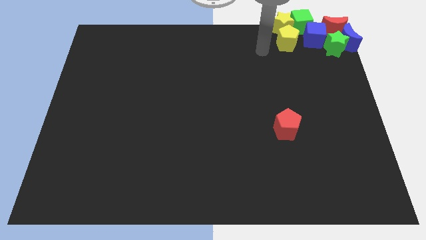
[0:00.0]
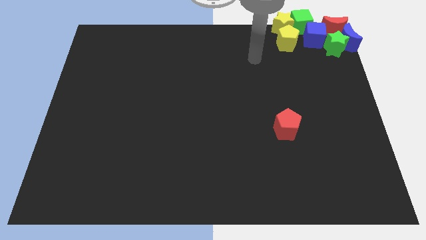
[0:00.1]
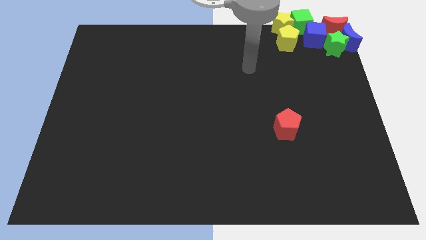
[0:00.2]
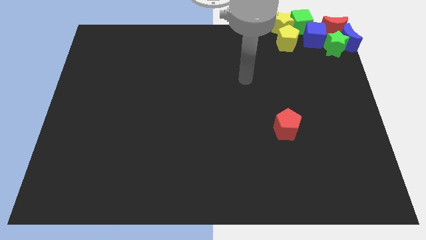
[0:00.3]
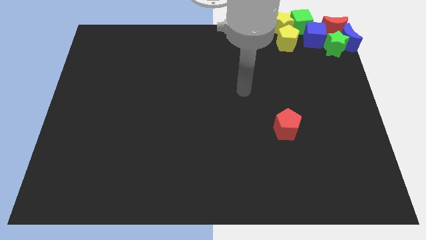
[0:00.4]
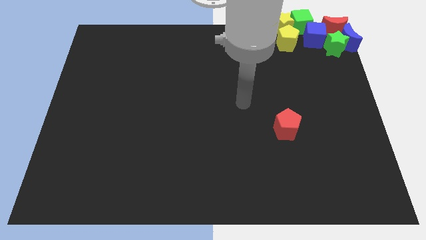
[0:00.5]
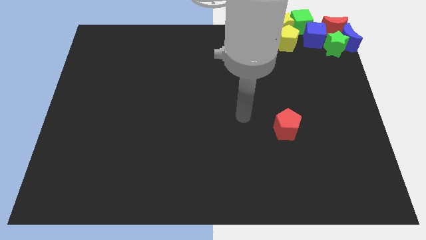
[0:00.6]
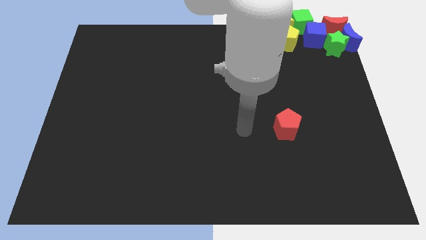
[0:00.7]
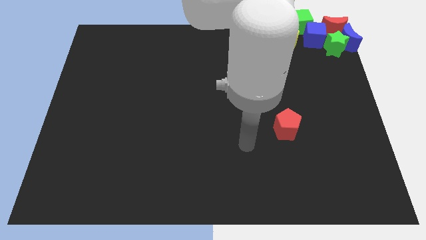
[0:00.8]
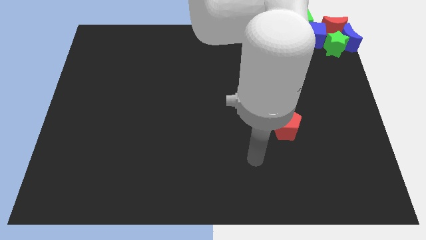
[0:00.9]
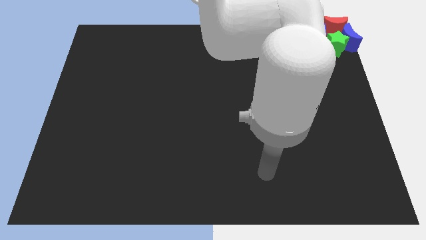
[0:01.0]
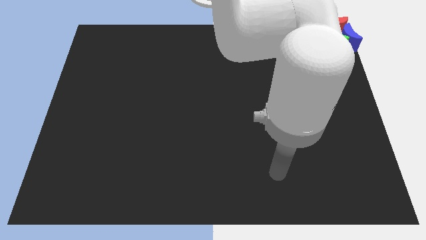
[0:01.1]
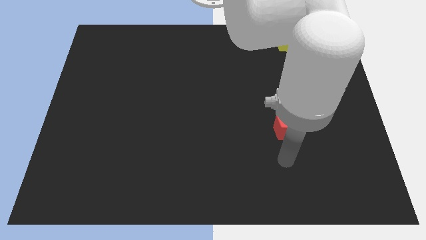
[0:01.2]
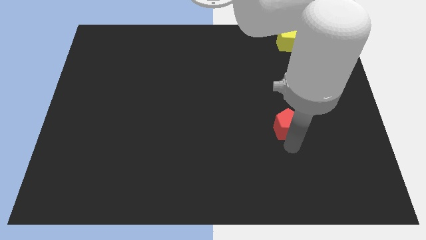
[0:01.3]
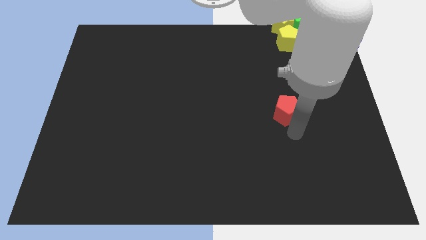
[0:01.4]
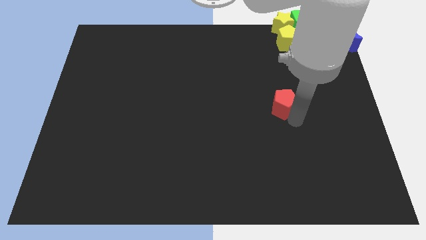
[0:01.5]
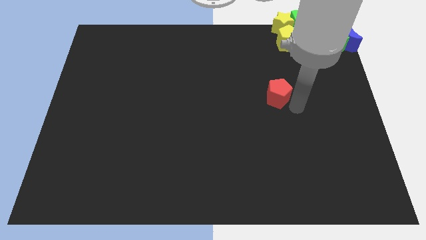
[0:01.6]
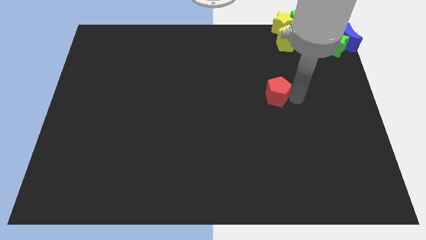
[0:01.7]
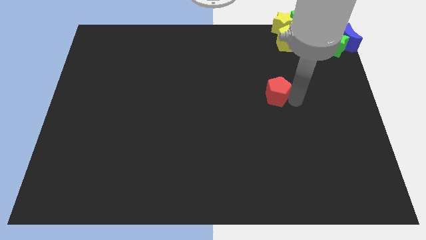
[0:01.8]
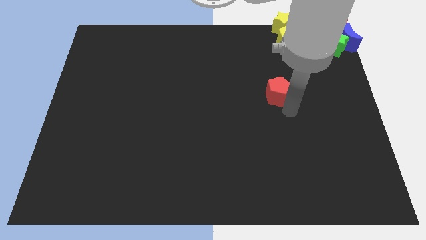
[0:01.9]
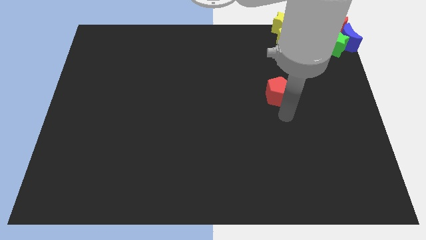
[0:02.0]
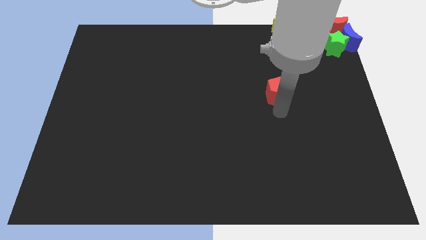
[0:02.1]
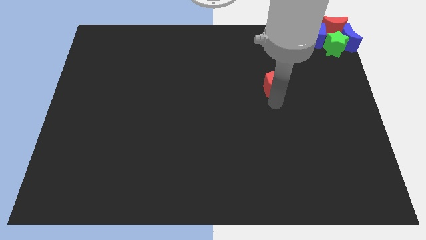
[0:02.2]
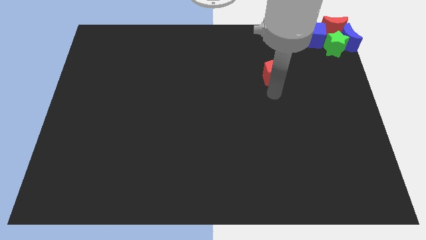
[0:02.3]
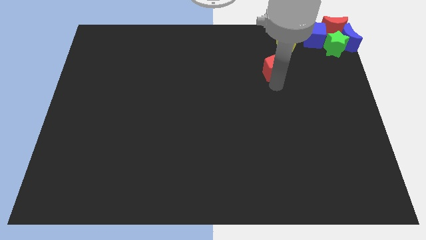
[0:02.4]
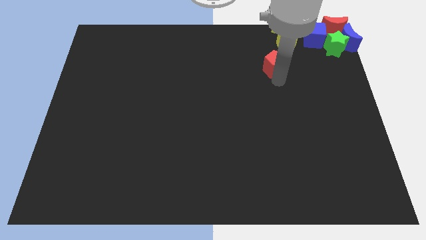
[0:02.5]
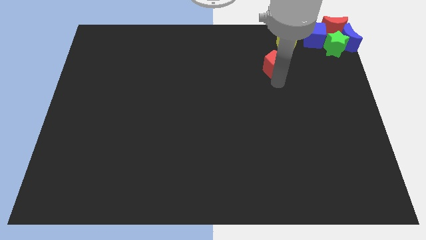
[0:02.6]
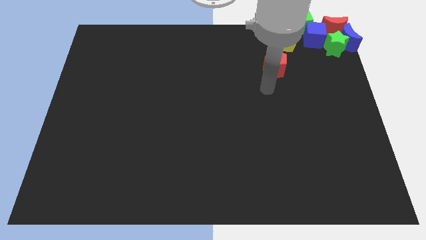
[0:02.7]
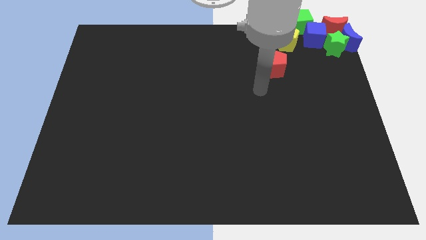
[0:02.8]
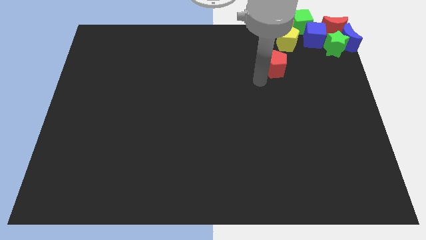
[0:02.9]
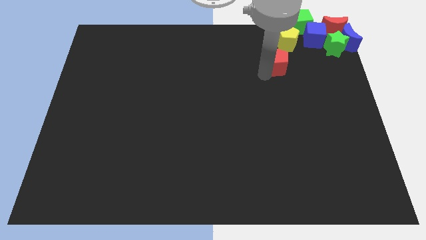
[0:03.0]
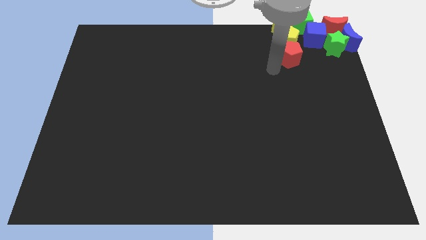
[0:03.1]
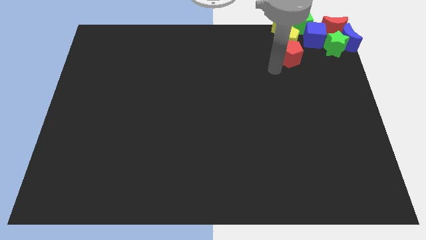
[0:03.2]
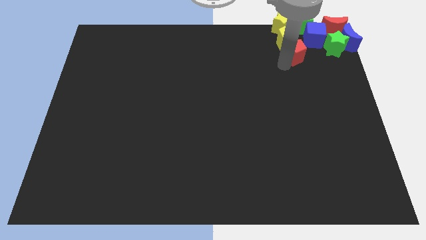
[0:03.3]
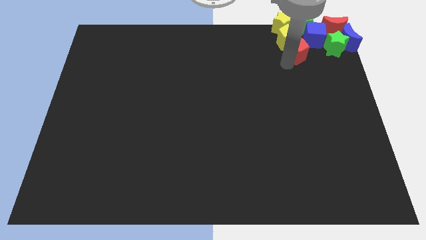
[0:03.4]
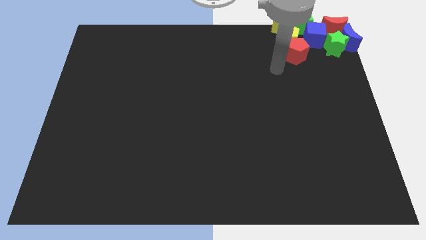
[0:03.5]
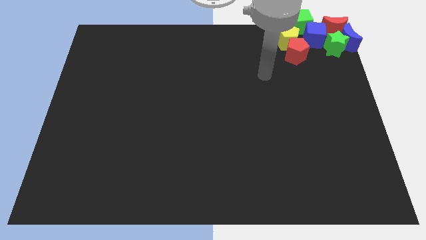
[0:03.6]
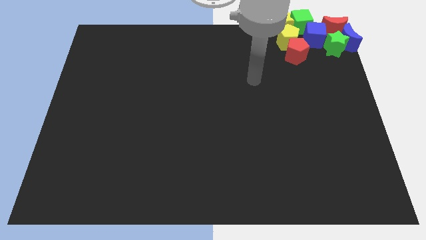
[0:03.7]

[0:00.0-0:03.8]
place red pentagon to the bottom of yellow pentagon

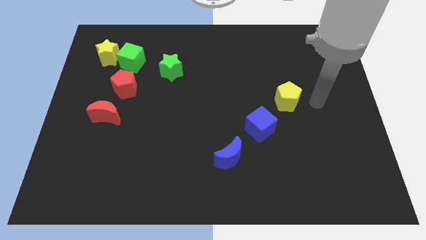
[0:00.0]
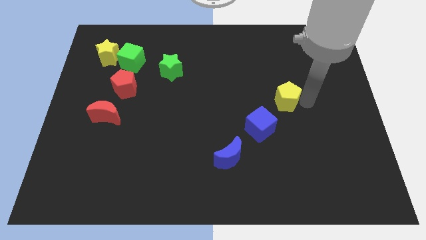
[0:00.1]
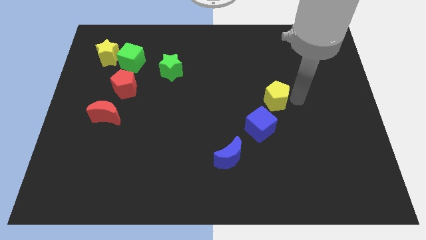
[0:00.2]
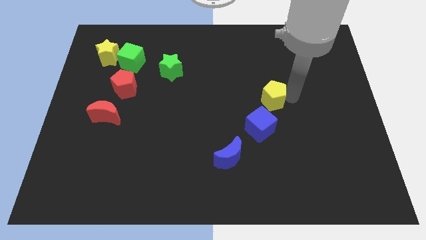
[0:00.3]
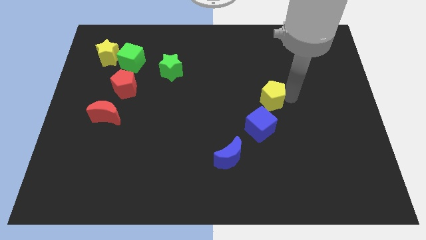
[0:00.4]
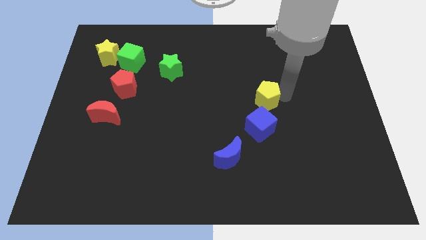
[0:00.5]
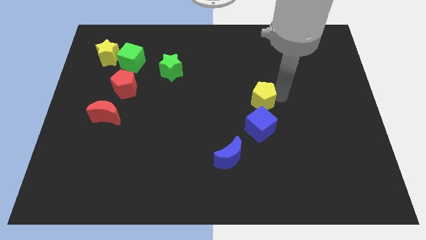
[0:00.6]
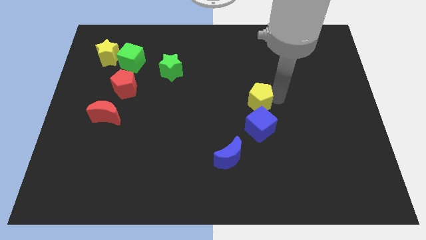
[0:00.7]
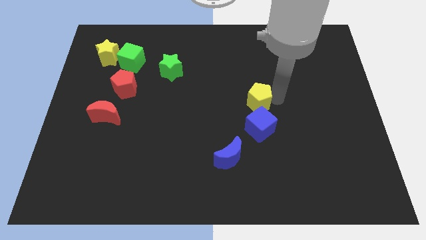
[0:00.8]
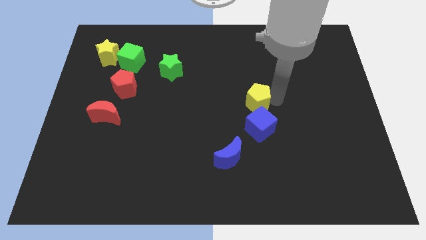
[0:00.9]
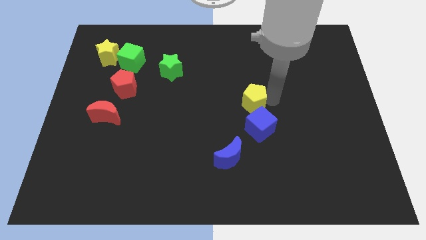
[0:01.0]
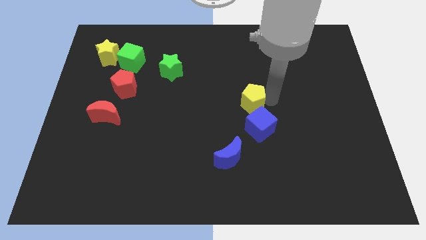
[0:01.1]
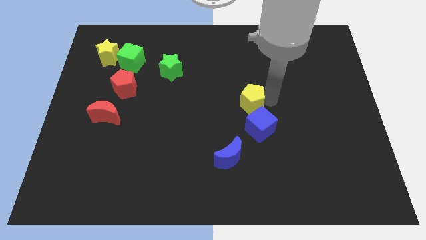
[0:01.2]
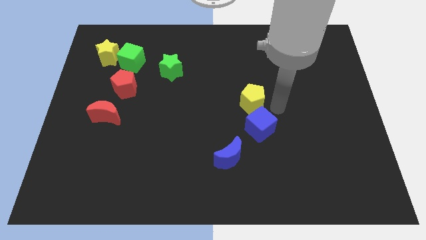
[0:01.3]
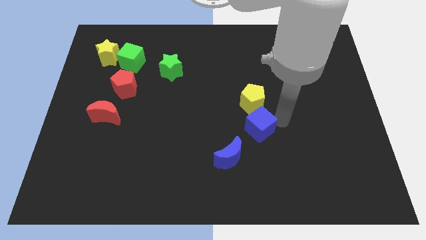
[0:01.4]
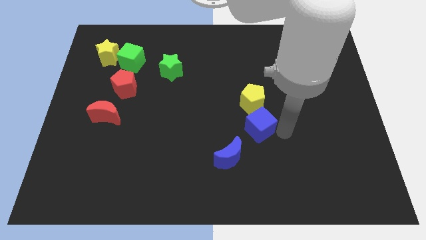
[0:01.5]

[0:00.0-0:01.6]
move the yellow pentagon to the top of the blue cube

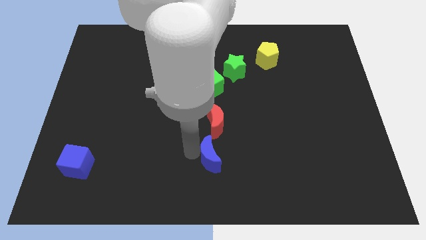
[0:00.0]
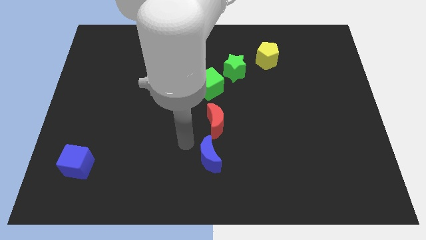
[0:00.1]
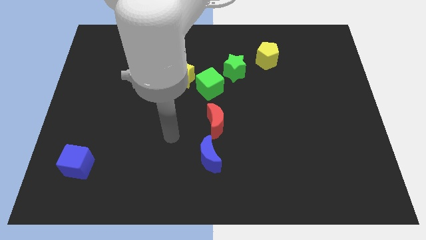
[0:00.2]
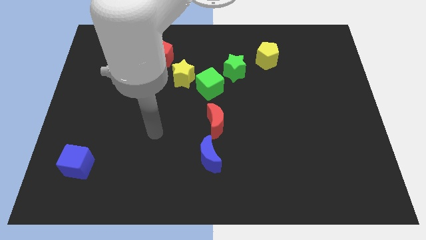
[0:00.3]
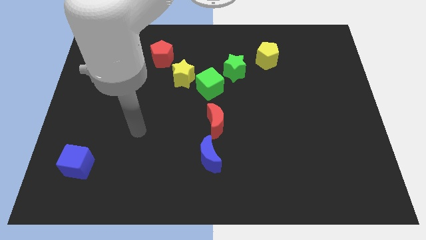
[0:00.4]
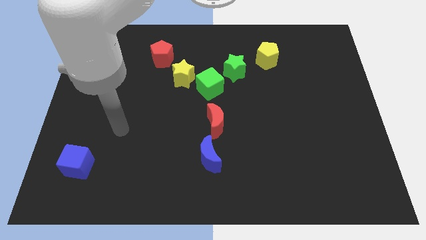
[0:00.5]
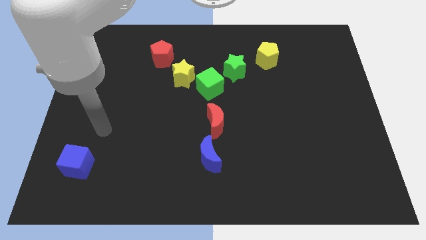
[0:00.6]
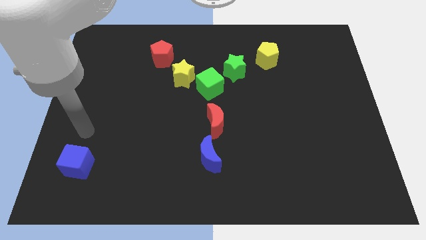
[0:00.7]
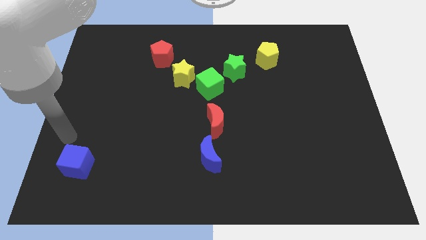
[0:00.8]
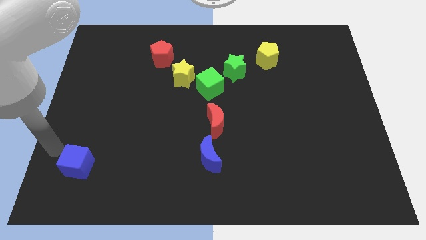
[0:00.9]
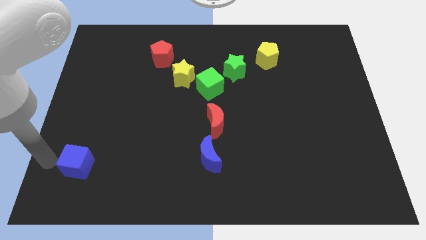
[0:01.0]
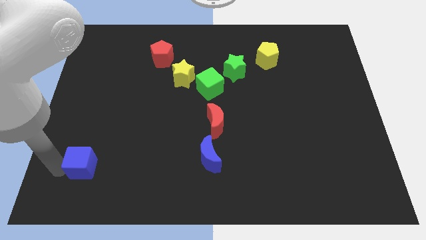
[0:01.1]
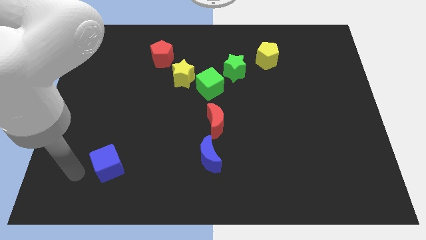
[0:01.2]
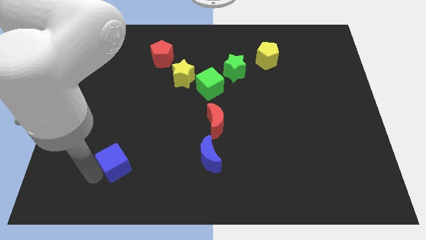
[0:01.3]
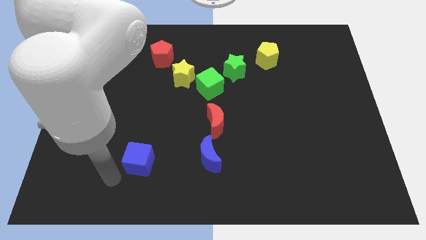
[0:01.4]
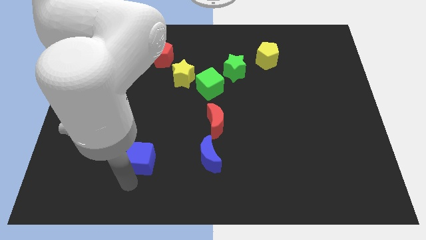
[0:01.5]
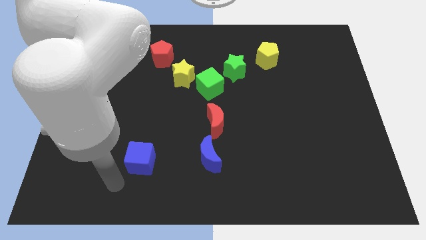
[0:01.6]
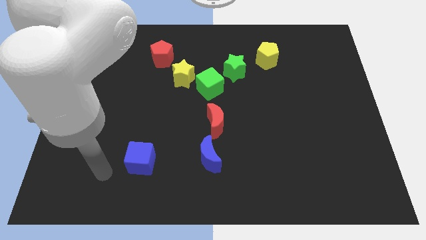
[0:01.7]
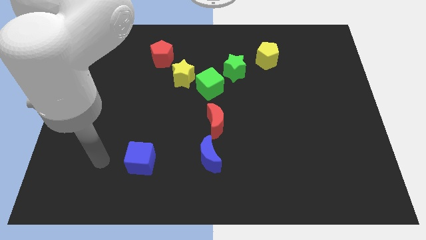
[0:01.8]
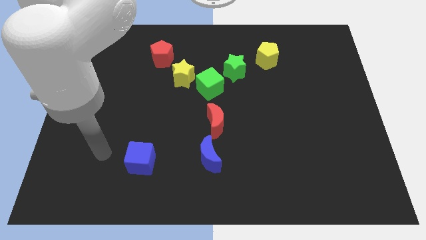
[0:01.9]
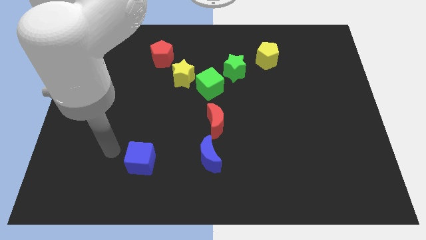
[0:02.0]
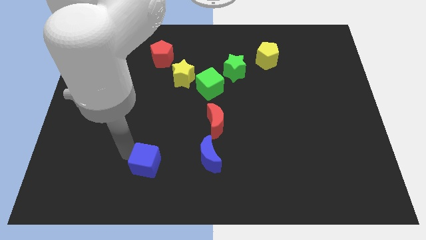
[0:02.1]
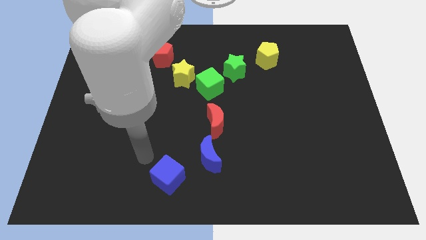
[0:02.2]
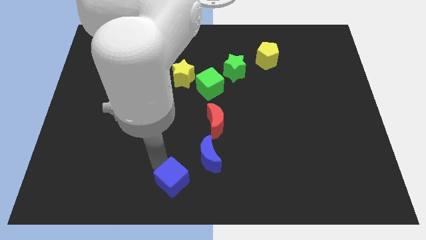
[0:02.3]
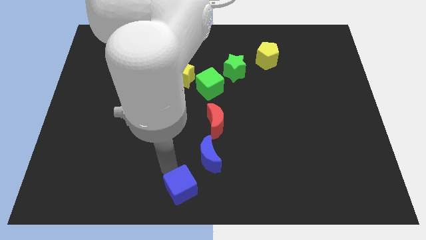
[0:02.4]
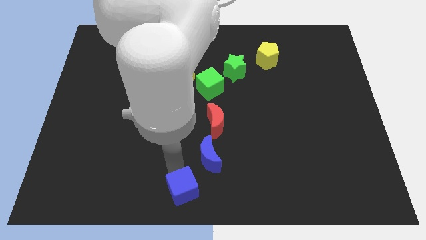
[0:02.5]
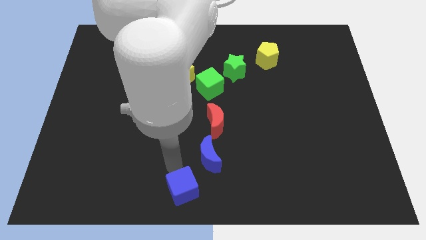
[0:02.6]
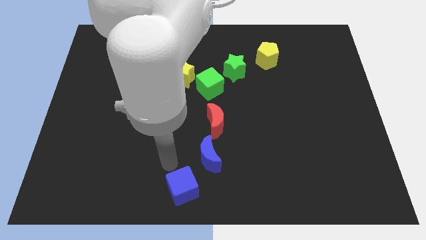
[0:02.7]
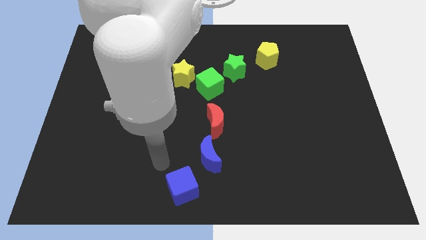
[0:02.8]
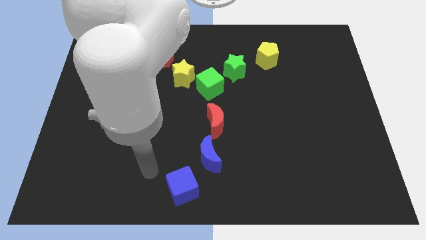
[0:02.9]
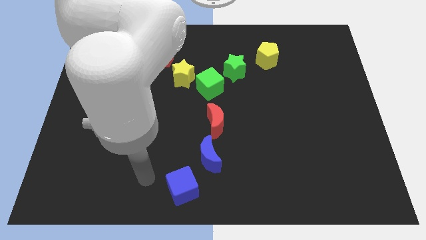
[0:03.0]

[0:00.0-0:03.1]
move the blue cube to the bottom left of the blue crescent

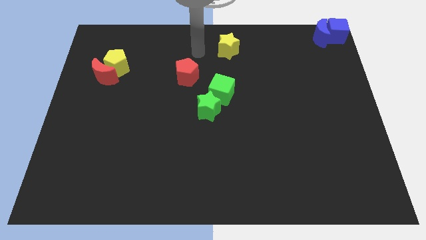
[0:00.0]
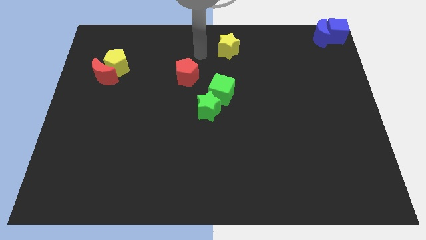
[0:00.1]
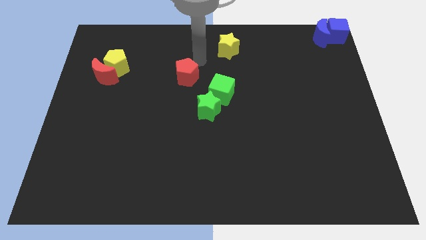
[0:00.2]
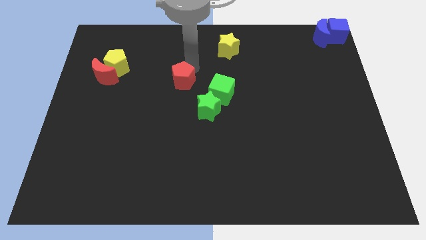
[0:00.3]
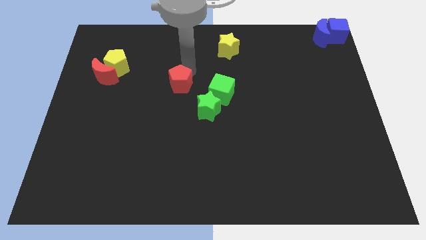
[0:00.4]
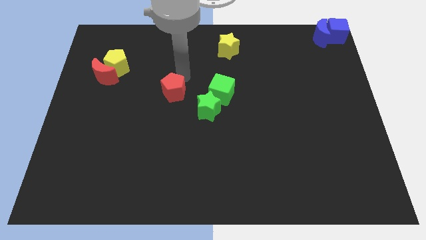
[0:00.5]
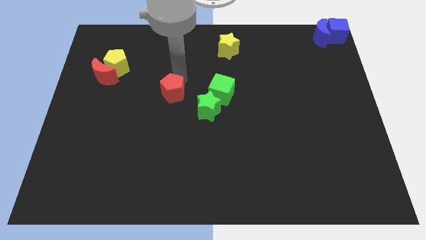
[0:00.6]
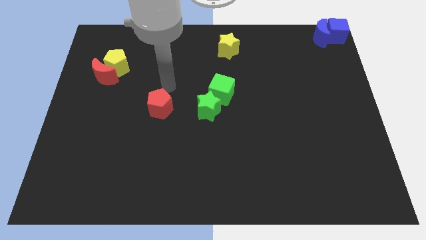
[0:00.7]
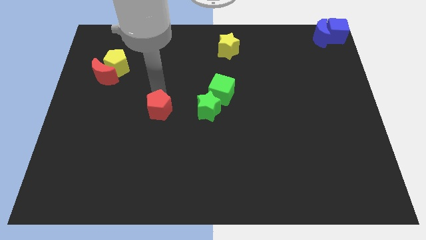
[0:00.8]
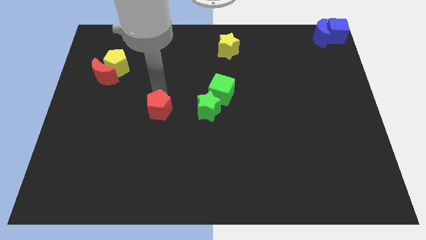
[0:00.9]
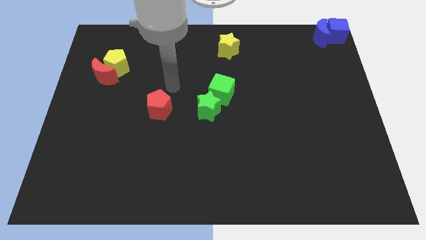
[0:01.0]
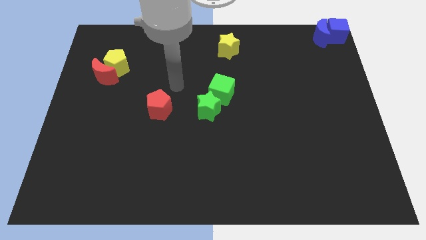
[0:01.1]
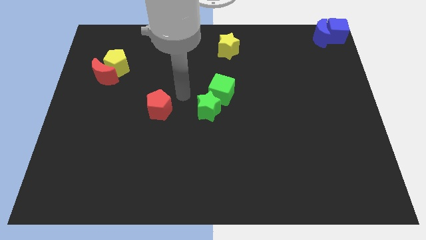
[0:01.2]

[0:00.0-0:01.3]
move the red pentagon diagonal to the left of the green star
